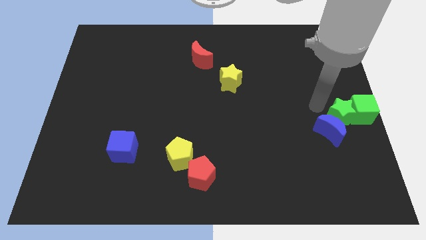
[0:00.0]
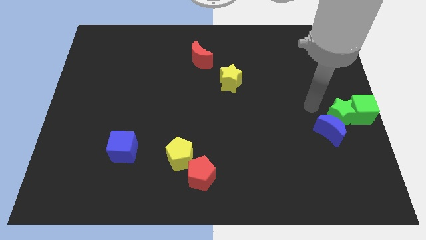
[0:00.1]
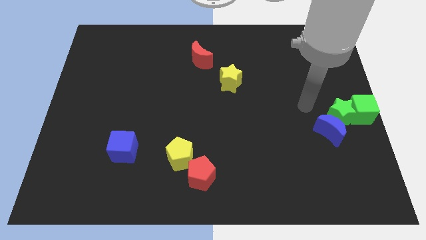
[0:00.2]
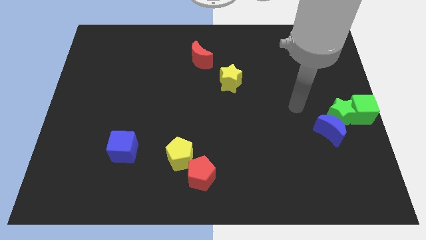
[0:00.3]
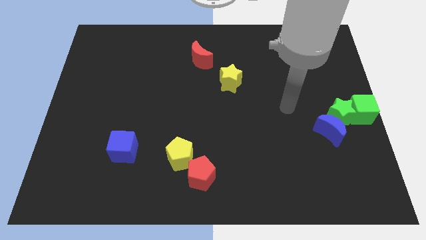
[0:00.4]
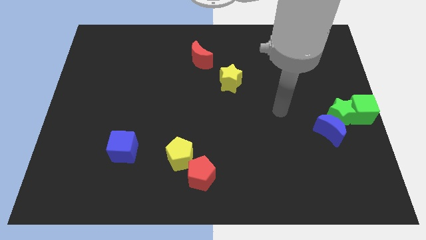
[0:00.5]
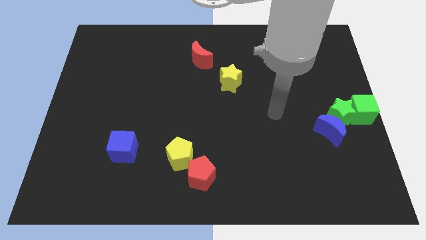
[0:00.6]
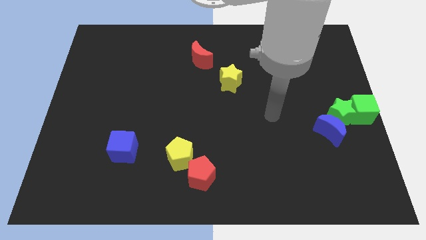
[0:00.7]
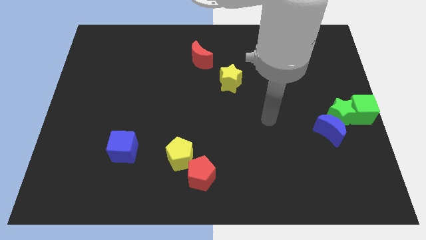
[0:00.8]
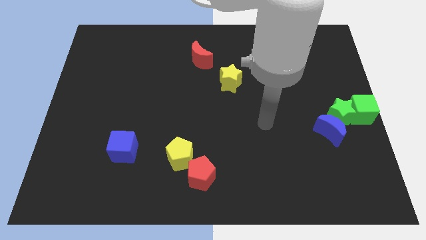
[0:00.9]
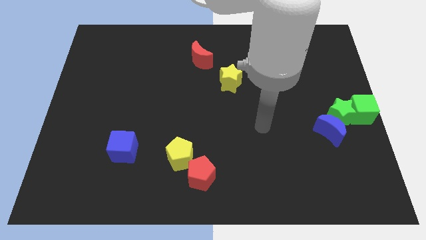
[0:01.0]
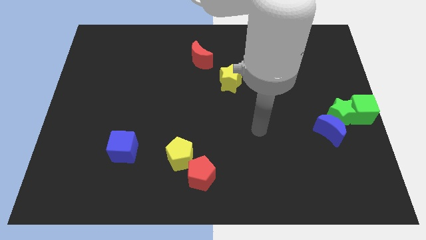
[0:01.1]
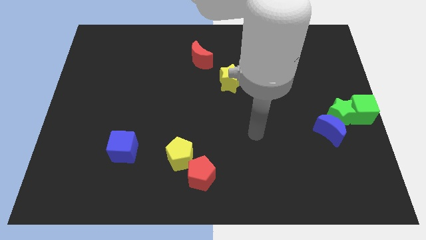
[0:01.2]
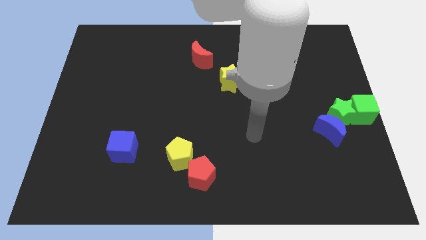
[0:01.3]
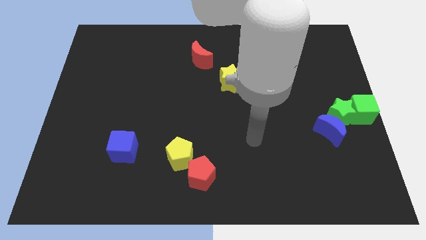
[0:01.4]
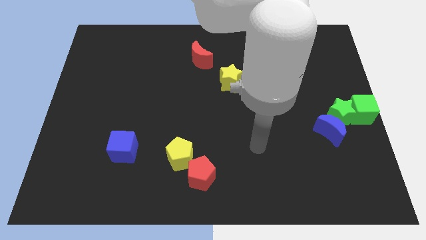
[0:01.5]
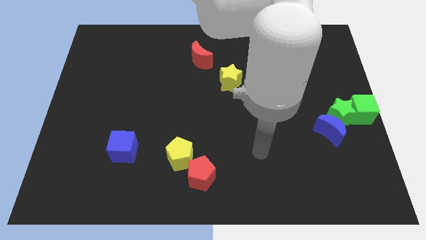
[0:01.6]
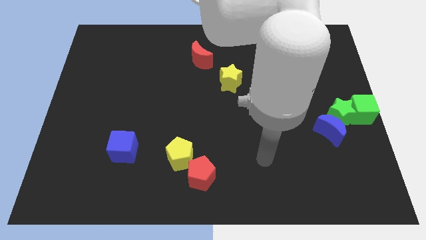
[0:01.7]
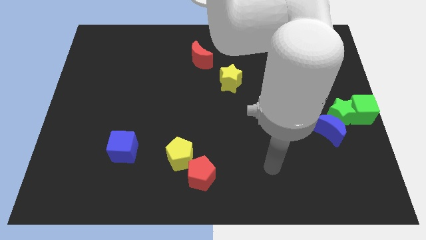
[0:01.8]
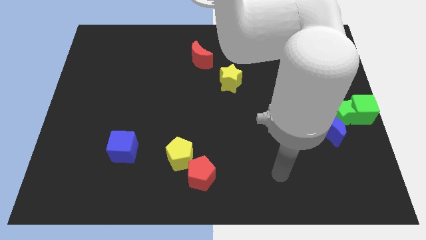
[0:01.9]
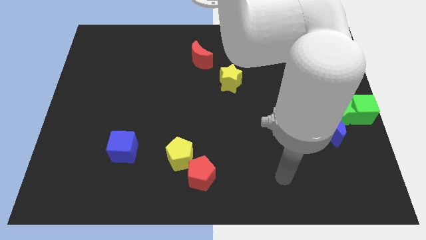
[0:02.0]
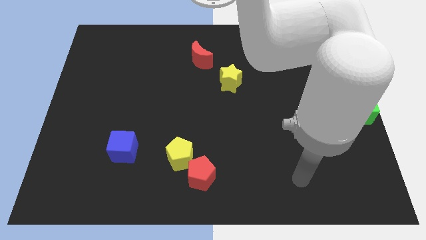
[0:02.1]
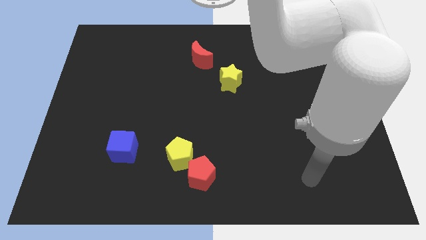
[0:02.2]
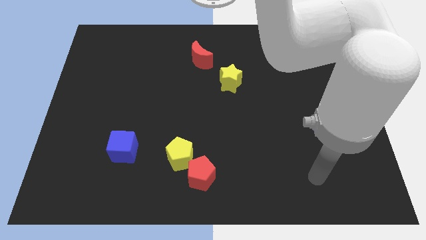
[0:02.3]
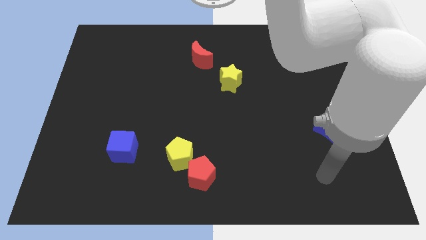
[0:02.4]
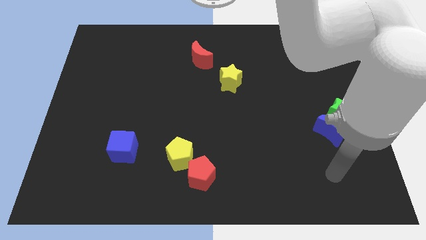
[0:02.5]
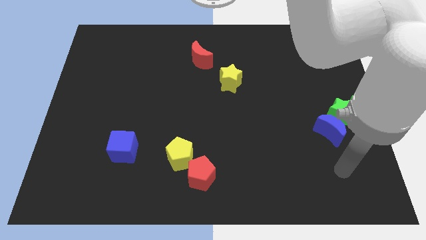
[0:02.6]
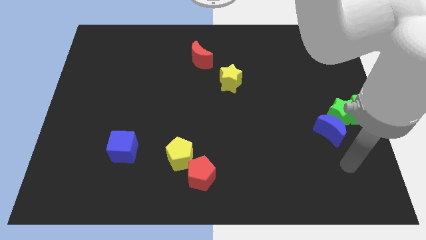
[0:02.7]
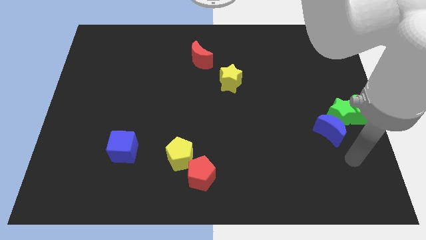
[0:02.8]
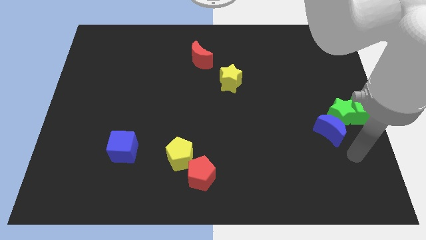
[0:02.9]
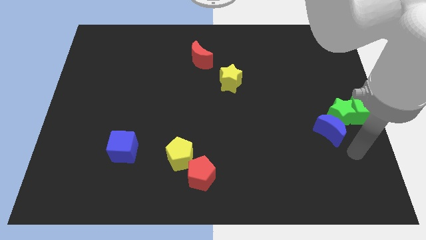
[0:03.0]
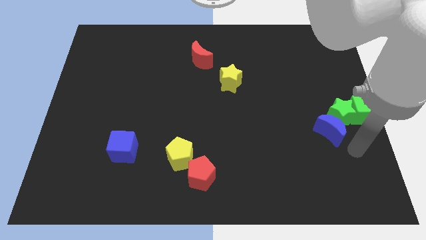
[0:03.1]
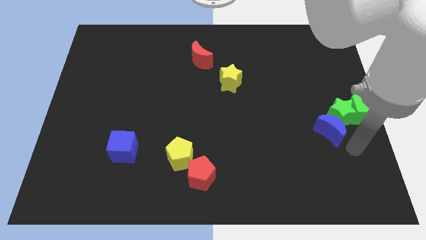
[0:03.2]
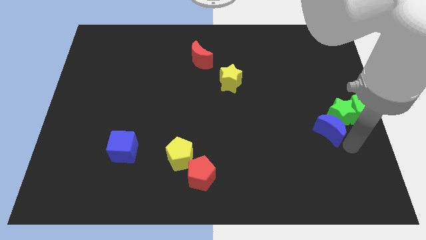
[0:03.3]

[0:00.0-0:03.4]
move your arm below the green star

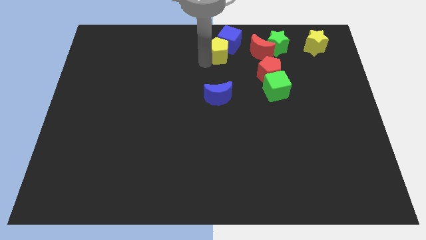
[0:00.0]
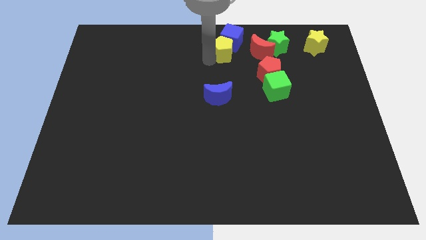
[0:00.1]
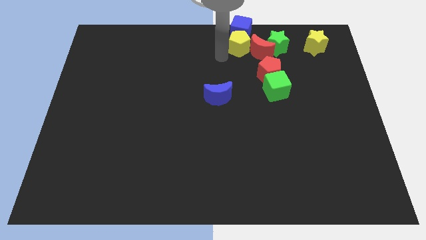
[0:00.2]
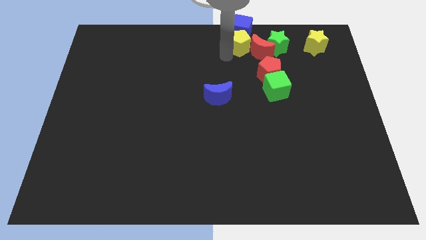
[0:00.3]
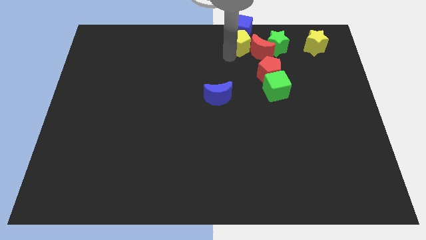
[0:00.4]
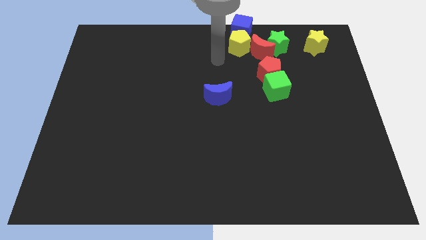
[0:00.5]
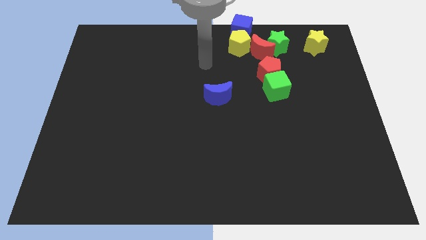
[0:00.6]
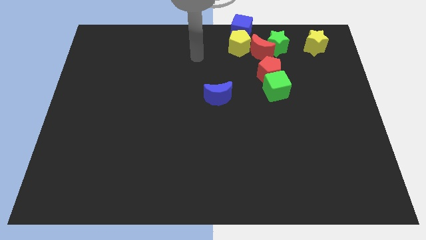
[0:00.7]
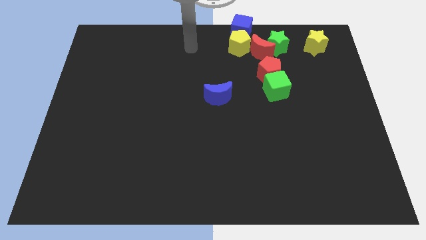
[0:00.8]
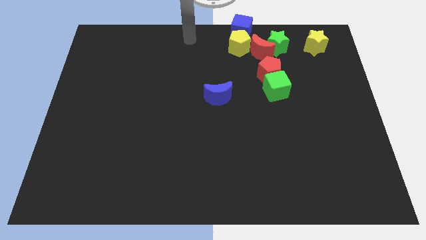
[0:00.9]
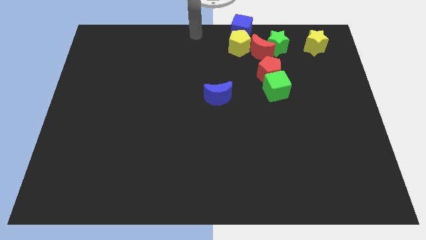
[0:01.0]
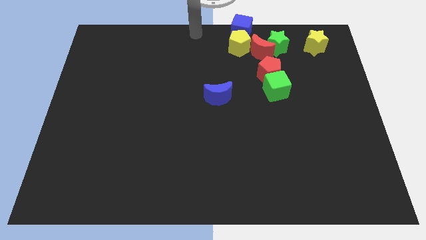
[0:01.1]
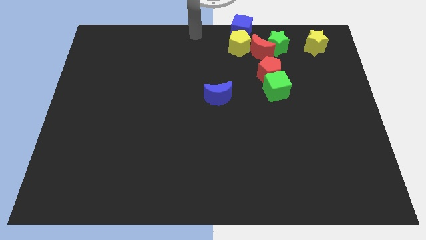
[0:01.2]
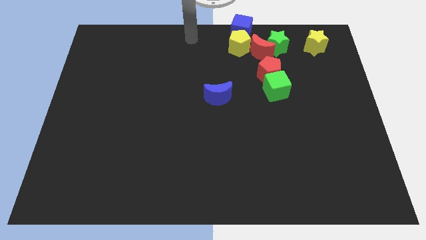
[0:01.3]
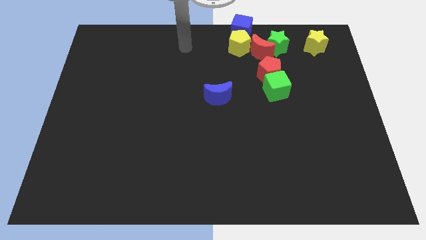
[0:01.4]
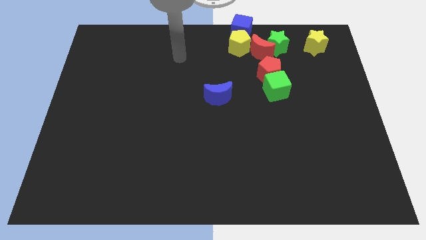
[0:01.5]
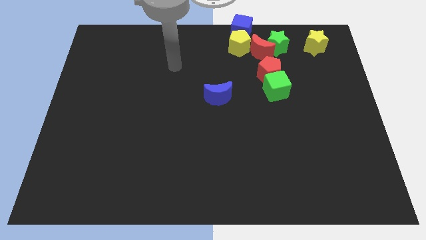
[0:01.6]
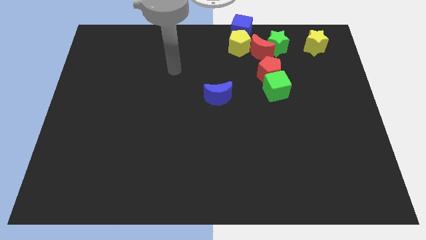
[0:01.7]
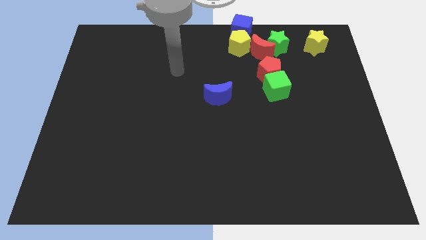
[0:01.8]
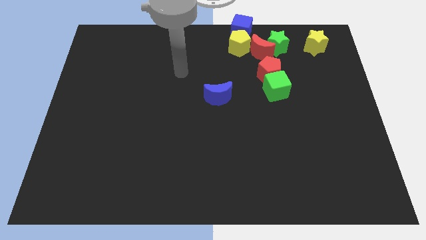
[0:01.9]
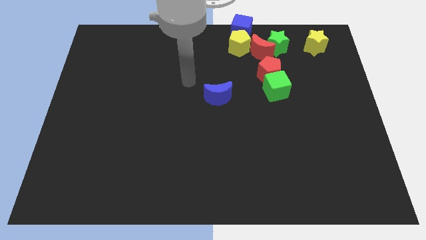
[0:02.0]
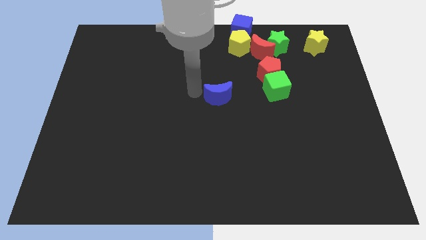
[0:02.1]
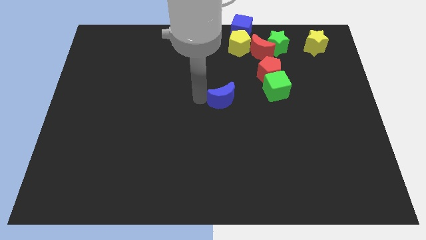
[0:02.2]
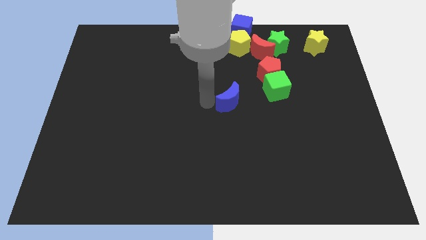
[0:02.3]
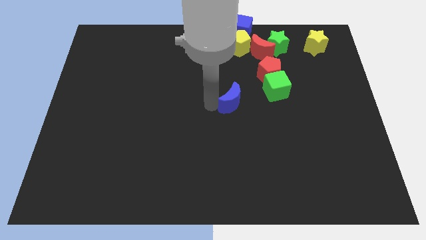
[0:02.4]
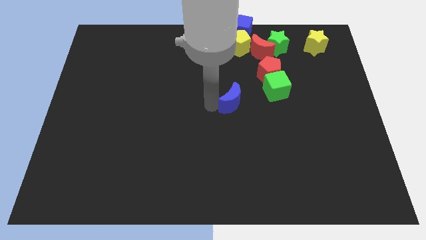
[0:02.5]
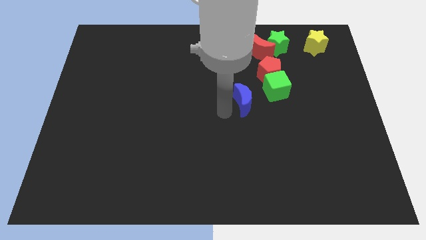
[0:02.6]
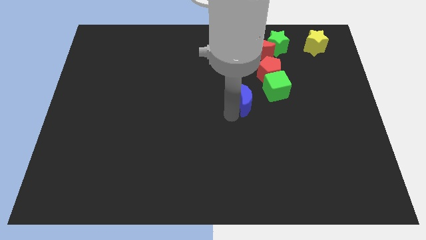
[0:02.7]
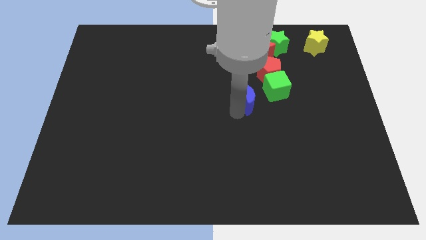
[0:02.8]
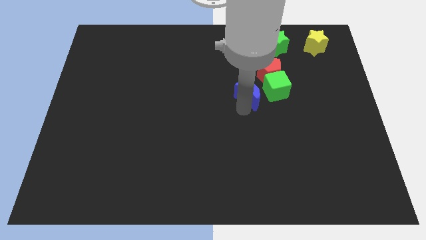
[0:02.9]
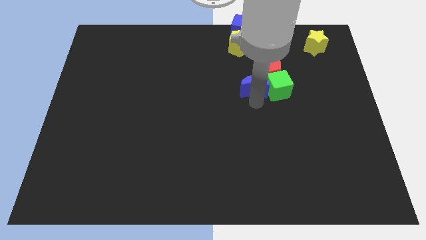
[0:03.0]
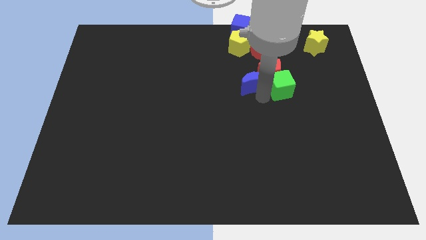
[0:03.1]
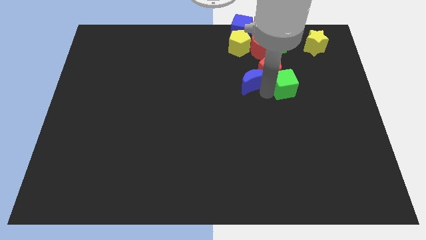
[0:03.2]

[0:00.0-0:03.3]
push the blue moon into green cube

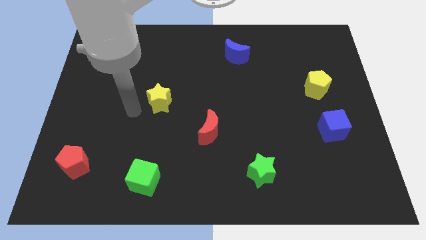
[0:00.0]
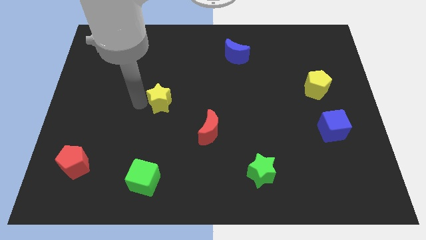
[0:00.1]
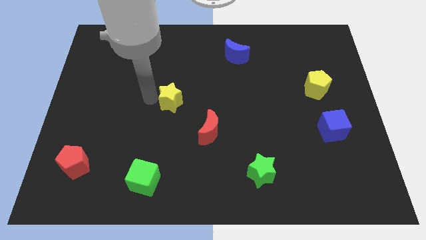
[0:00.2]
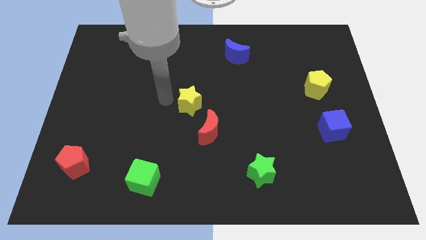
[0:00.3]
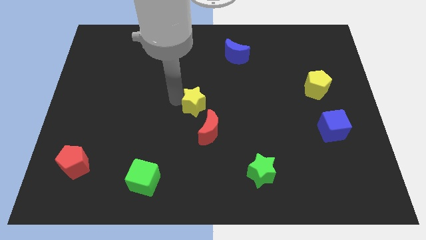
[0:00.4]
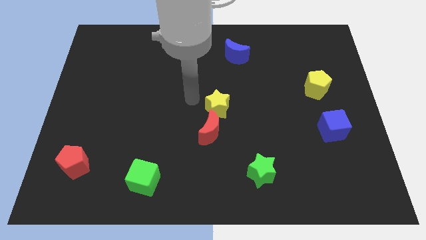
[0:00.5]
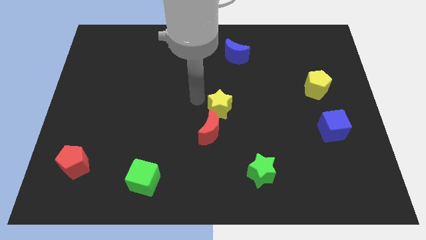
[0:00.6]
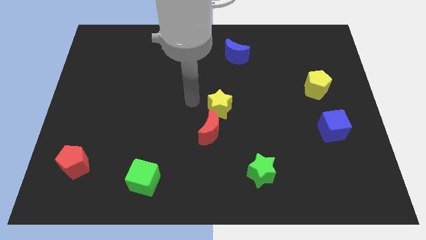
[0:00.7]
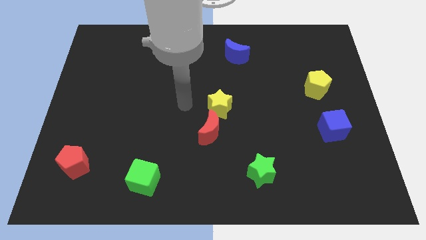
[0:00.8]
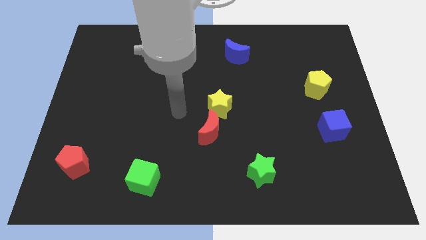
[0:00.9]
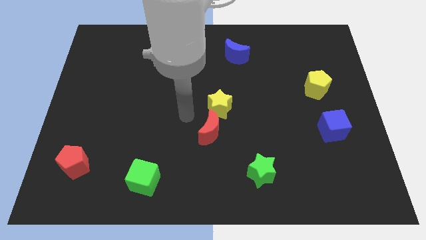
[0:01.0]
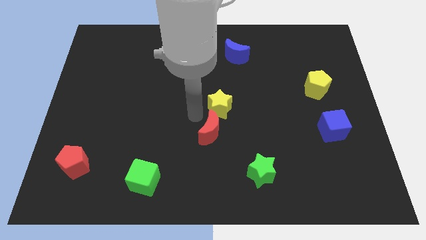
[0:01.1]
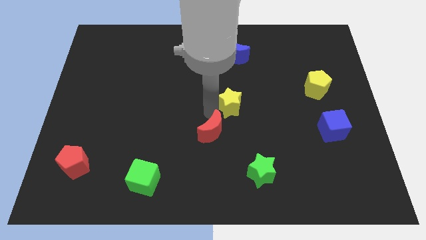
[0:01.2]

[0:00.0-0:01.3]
place yellow star above the red crescent

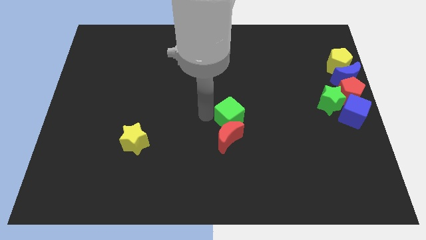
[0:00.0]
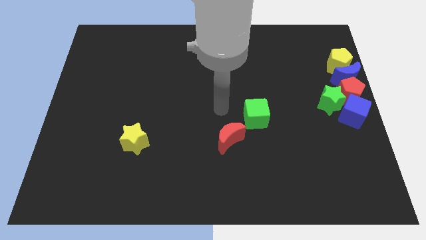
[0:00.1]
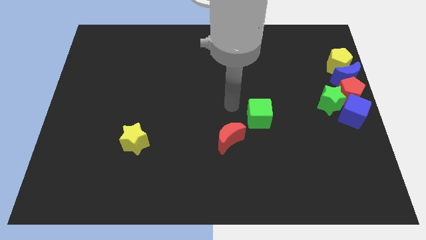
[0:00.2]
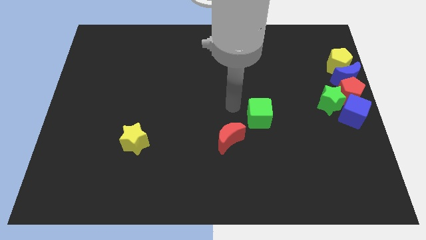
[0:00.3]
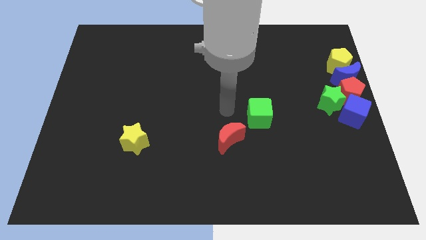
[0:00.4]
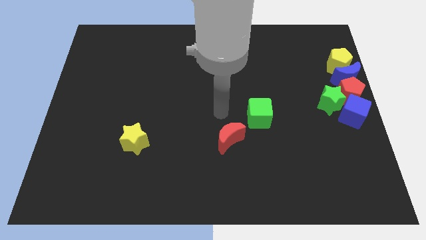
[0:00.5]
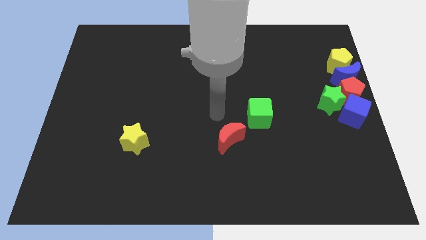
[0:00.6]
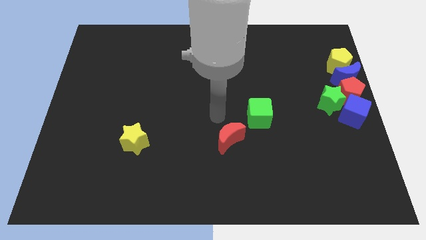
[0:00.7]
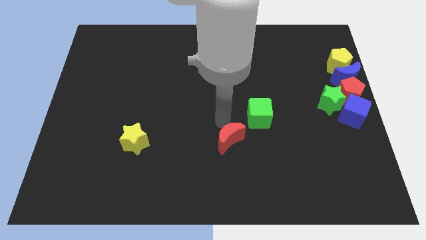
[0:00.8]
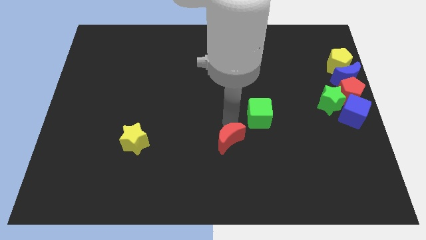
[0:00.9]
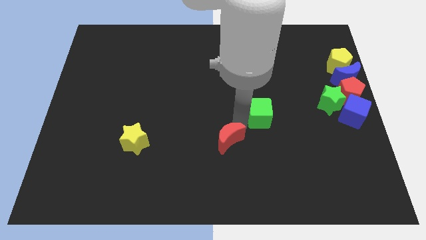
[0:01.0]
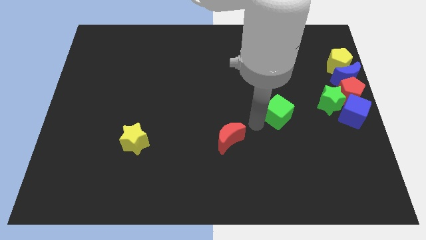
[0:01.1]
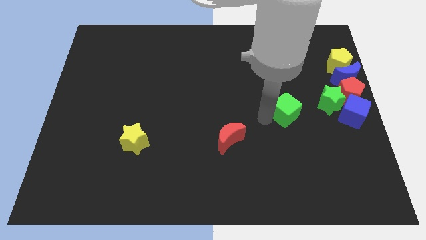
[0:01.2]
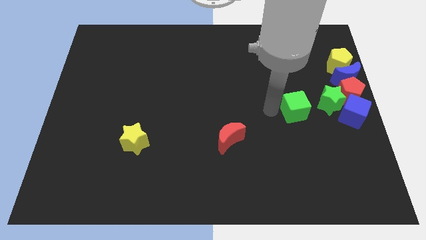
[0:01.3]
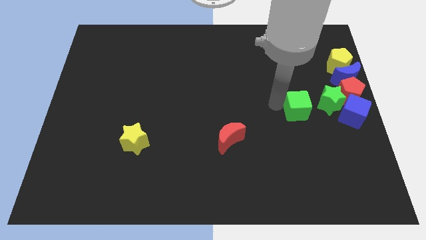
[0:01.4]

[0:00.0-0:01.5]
move the green cube away from the red crescent
